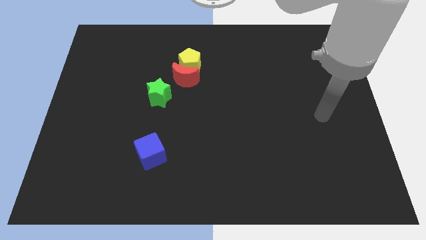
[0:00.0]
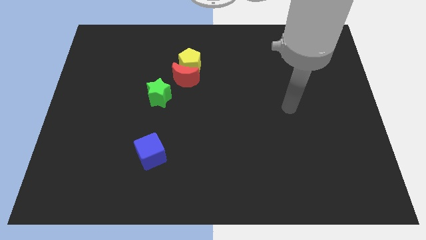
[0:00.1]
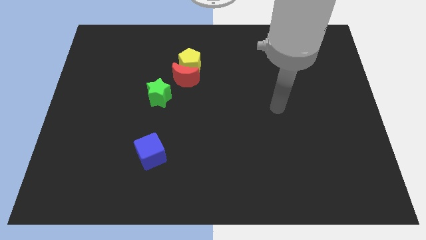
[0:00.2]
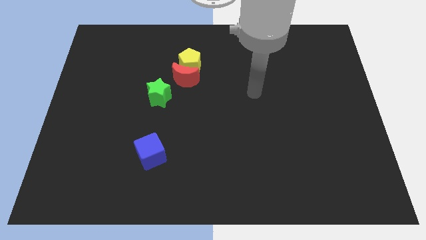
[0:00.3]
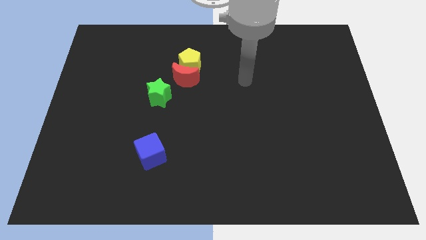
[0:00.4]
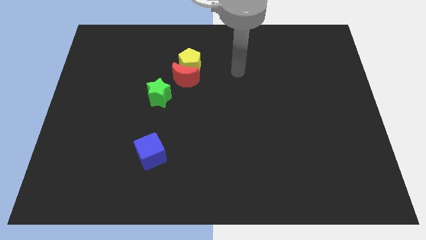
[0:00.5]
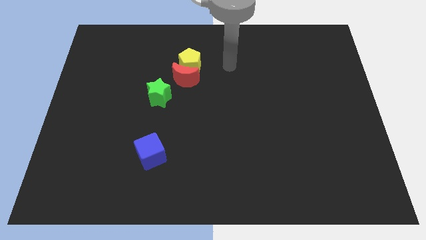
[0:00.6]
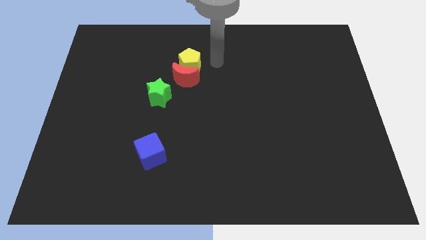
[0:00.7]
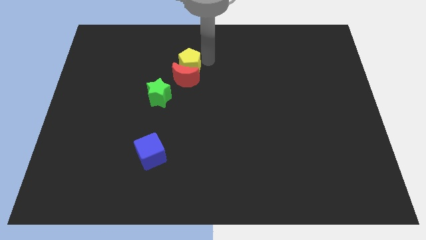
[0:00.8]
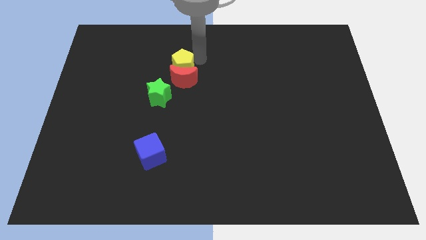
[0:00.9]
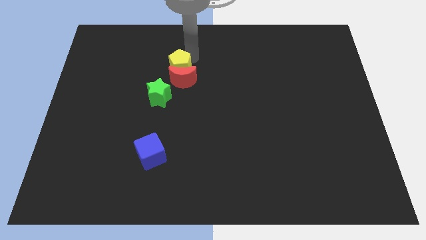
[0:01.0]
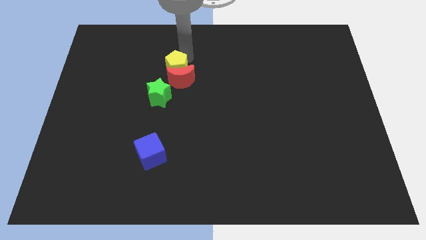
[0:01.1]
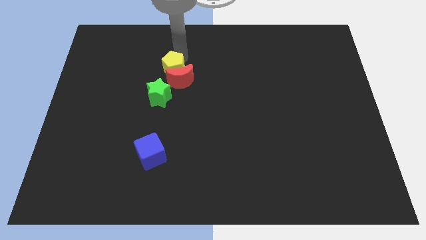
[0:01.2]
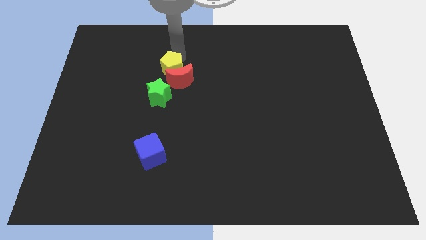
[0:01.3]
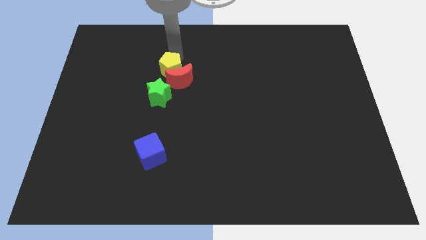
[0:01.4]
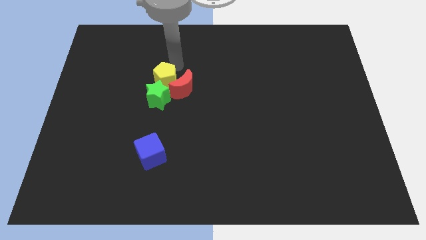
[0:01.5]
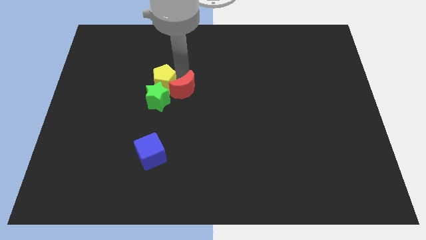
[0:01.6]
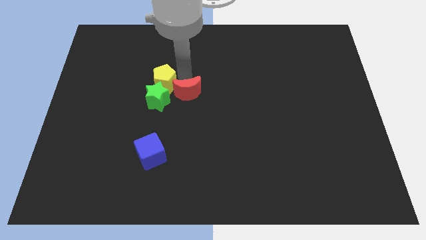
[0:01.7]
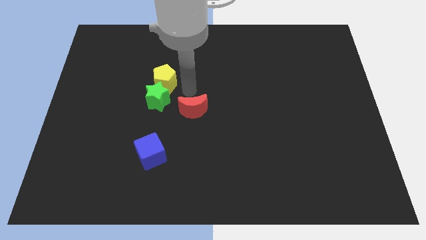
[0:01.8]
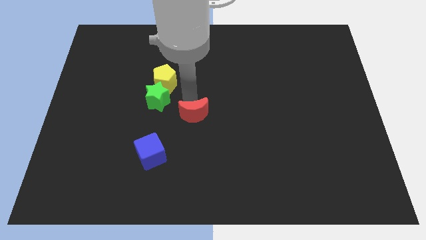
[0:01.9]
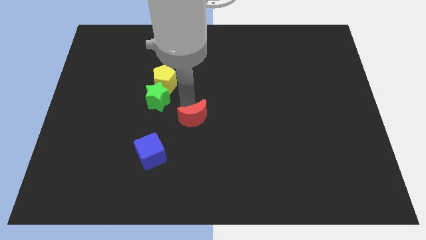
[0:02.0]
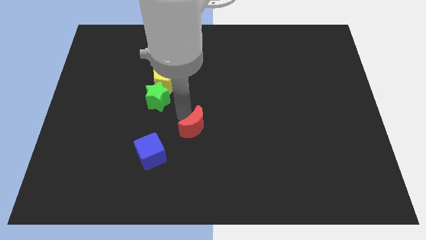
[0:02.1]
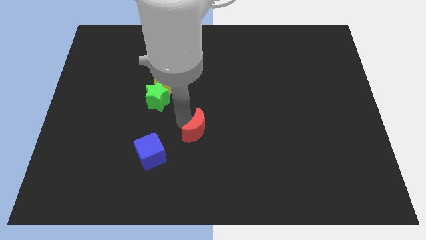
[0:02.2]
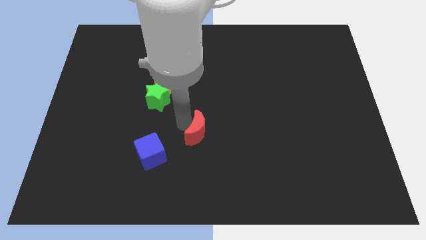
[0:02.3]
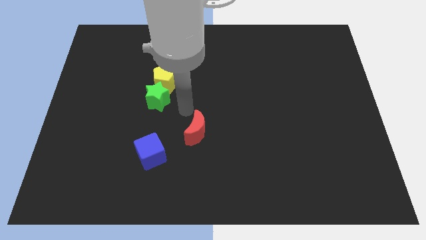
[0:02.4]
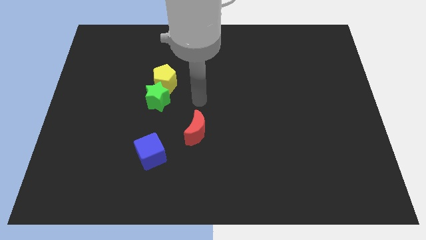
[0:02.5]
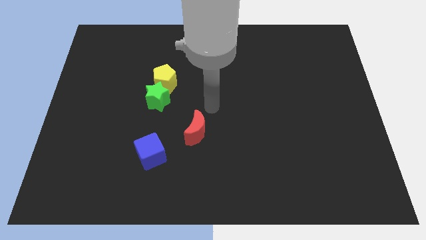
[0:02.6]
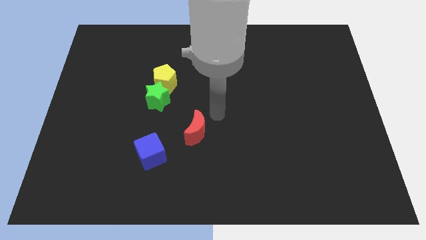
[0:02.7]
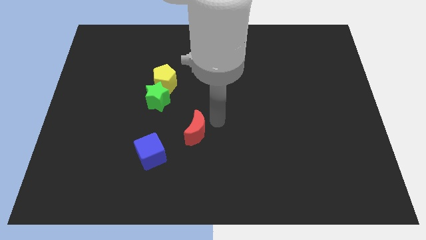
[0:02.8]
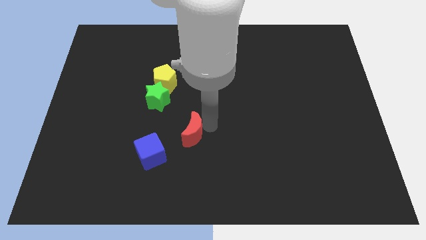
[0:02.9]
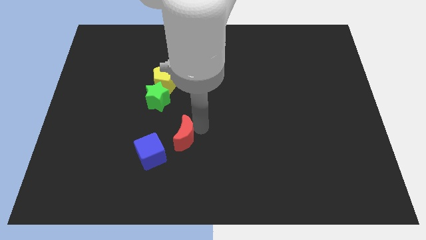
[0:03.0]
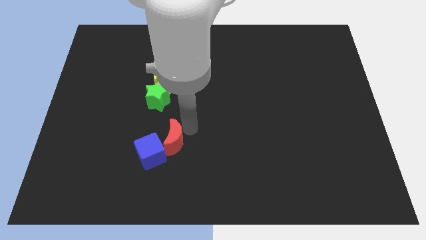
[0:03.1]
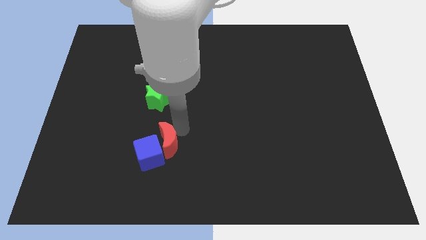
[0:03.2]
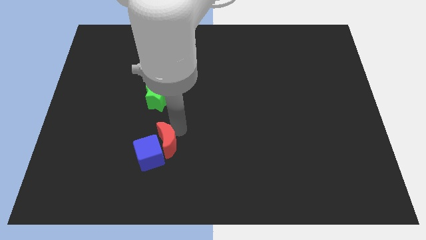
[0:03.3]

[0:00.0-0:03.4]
move the red block next to the blue cube

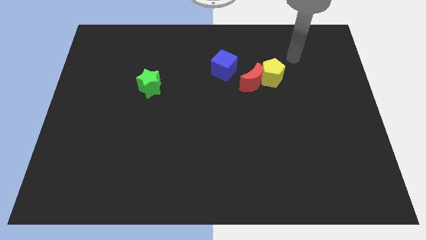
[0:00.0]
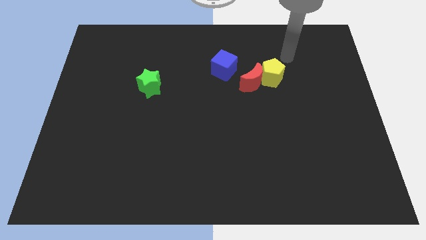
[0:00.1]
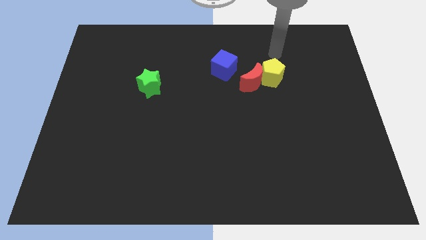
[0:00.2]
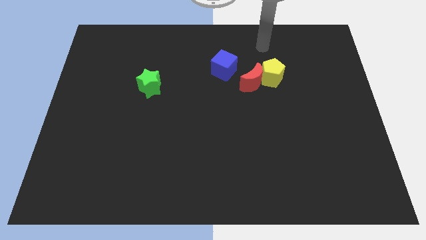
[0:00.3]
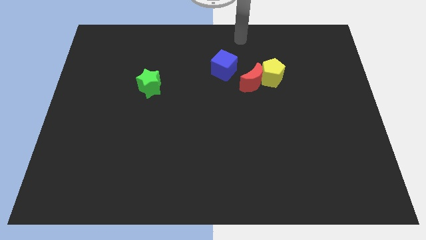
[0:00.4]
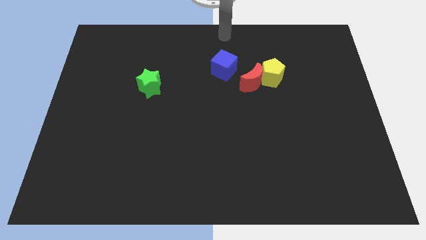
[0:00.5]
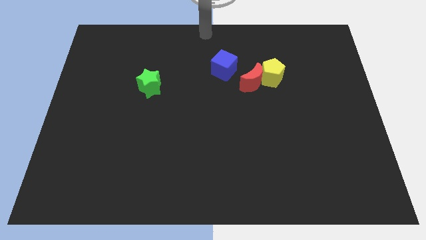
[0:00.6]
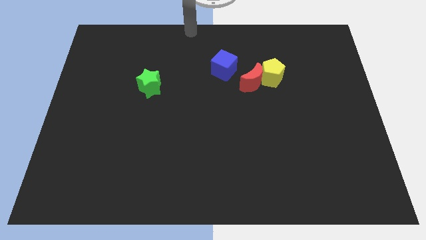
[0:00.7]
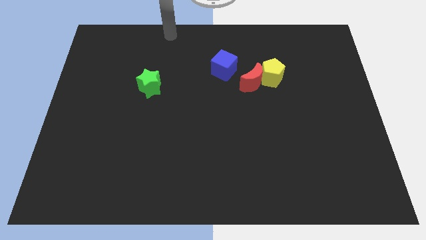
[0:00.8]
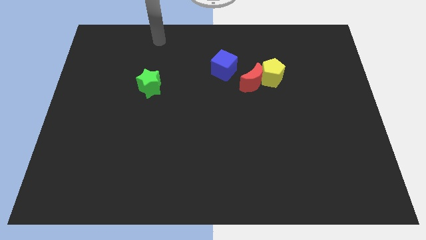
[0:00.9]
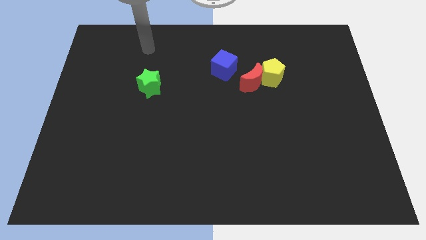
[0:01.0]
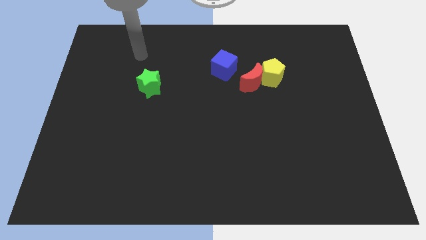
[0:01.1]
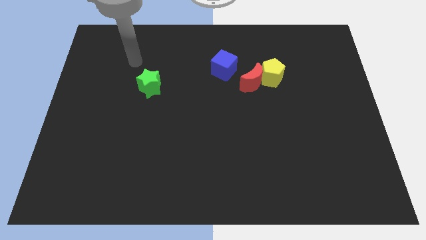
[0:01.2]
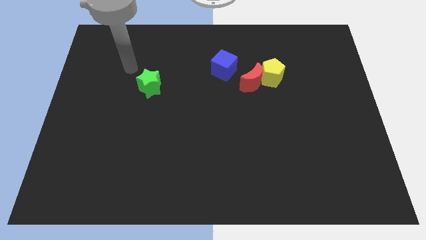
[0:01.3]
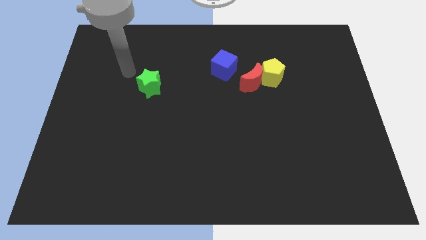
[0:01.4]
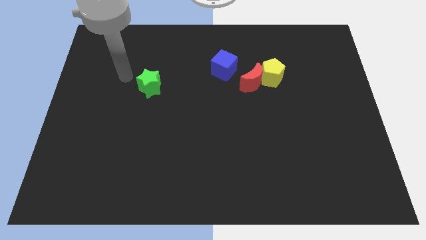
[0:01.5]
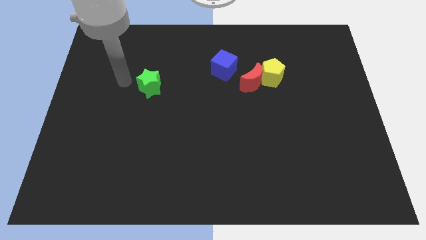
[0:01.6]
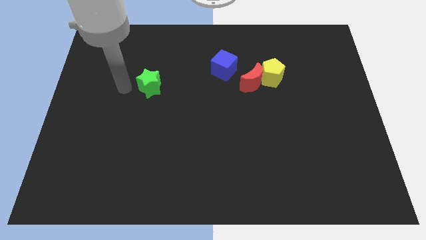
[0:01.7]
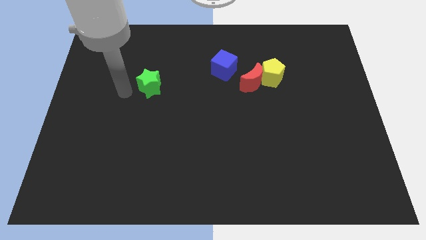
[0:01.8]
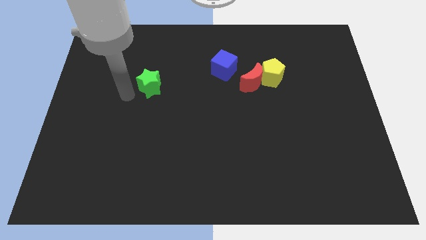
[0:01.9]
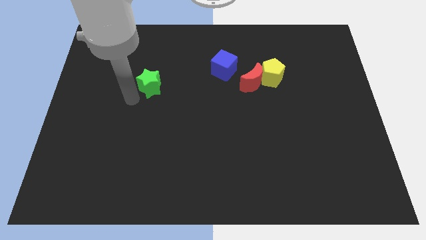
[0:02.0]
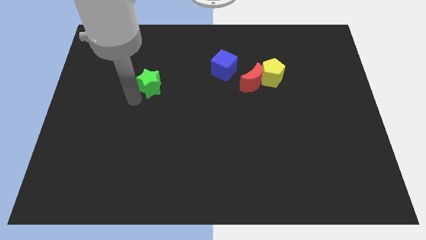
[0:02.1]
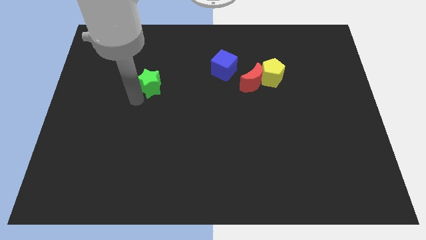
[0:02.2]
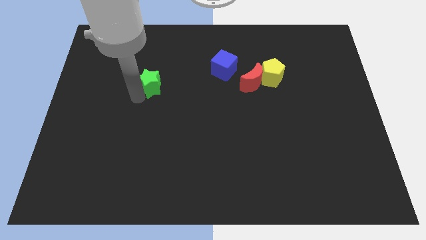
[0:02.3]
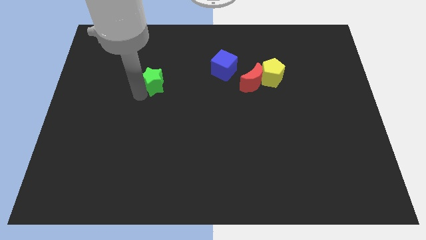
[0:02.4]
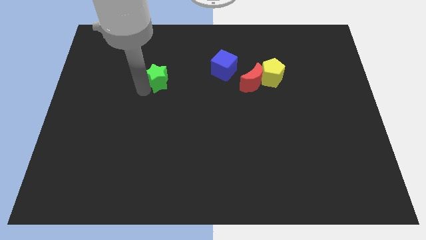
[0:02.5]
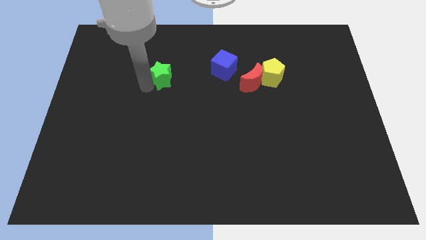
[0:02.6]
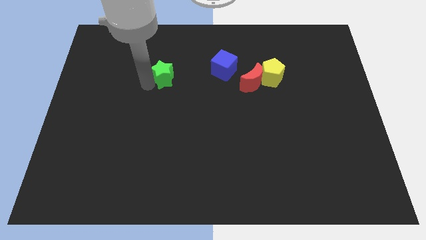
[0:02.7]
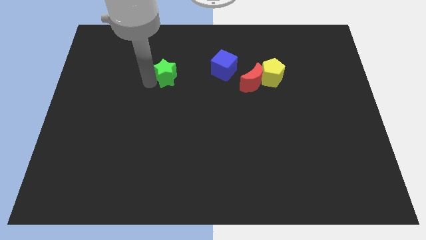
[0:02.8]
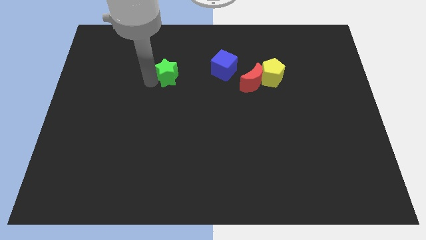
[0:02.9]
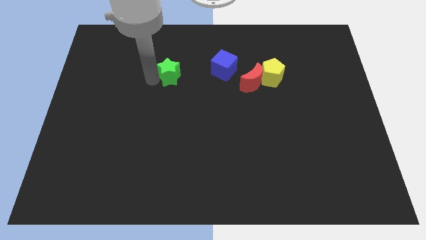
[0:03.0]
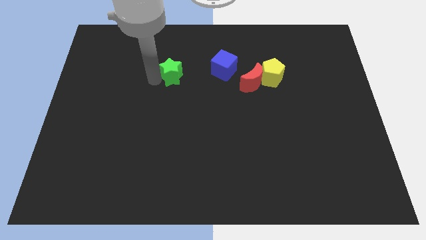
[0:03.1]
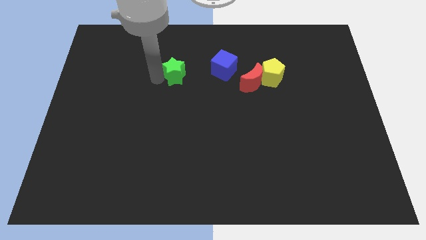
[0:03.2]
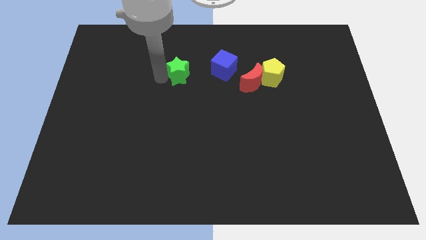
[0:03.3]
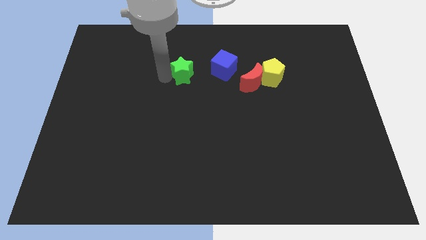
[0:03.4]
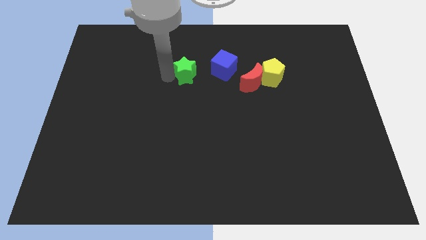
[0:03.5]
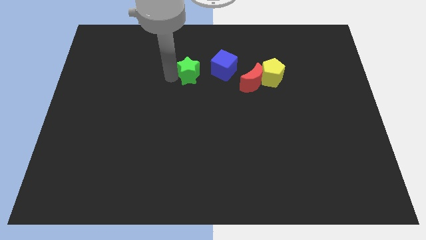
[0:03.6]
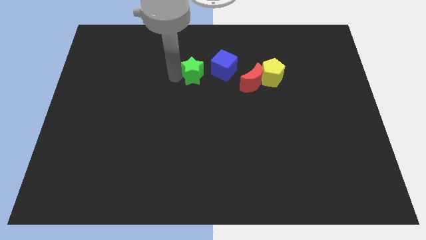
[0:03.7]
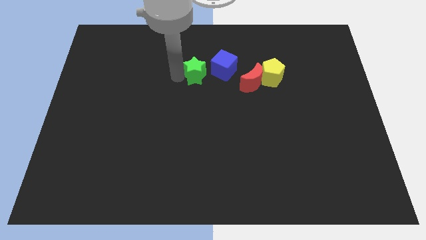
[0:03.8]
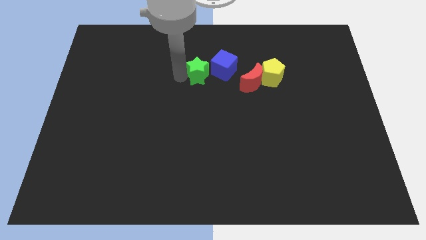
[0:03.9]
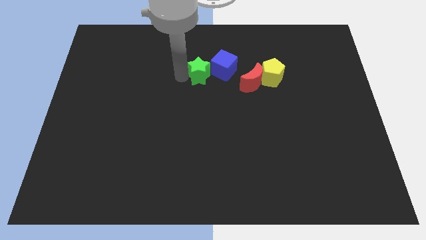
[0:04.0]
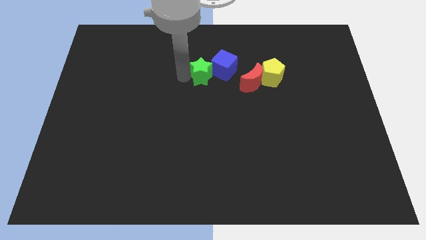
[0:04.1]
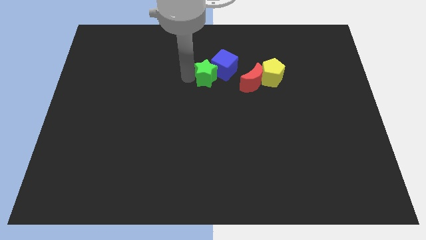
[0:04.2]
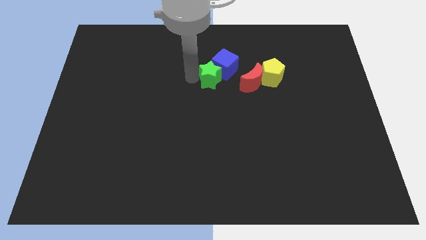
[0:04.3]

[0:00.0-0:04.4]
slide the green block close to the blue block

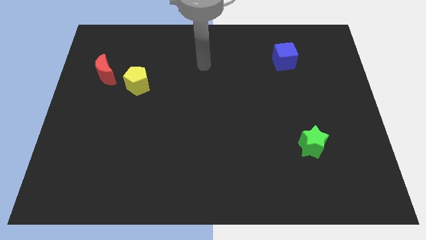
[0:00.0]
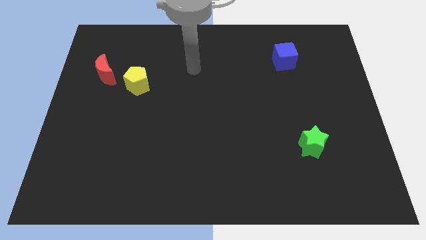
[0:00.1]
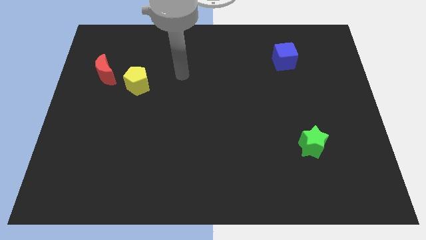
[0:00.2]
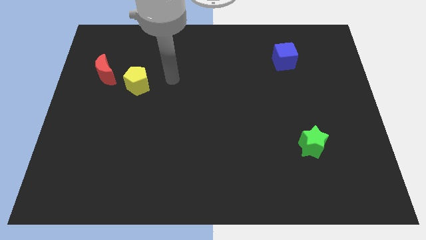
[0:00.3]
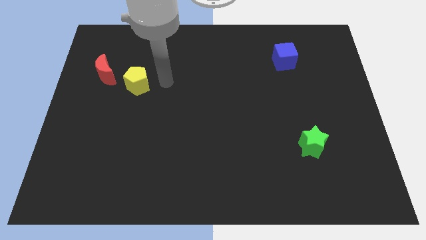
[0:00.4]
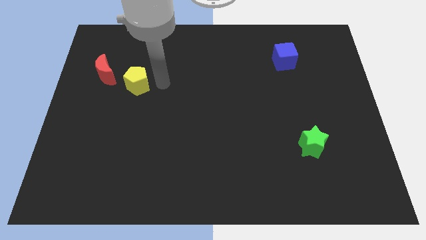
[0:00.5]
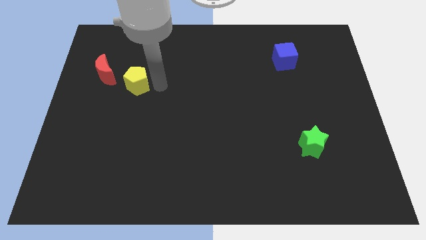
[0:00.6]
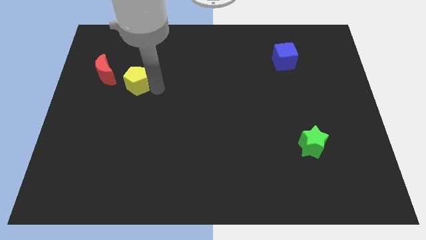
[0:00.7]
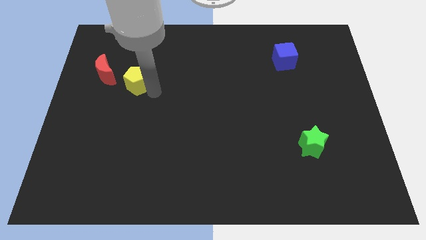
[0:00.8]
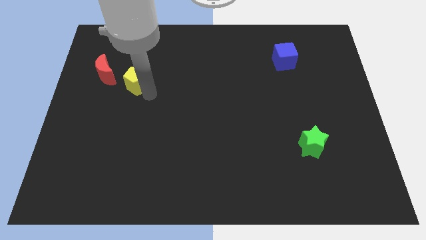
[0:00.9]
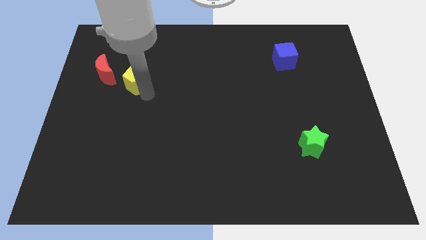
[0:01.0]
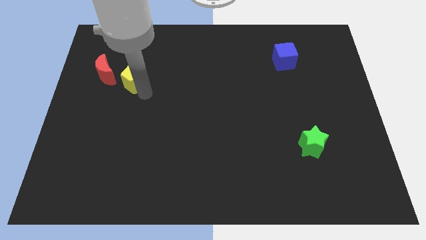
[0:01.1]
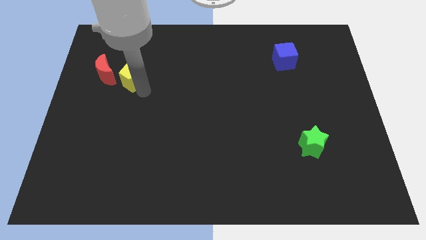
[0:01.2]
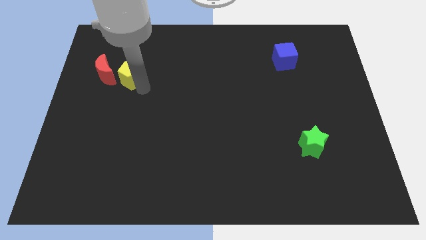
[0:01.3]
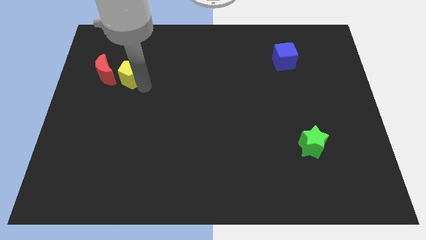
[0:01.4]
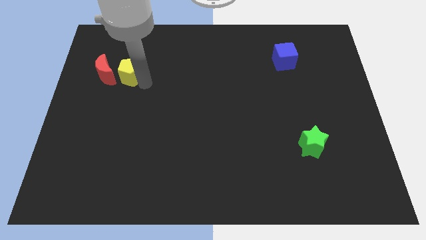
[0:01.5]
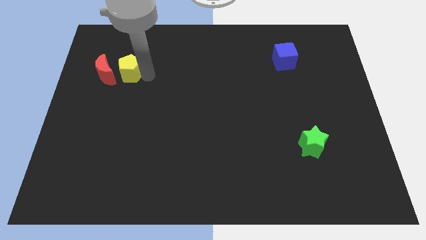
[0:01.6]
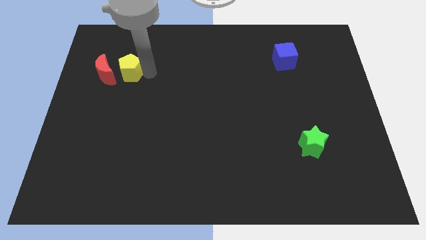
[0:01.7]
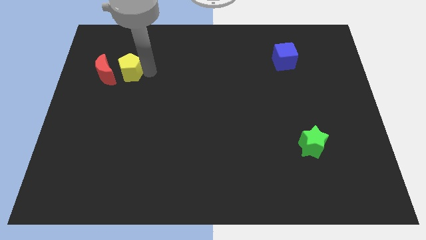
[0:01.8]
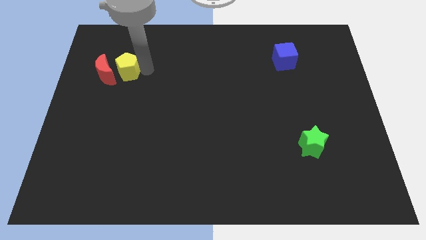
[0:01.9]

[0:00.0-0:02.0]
slide the yellow block towards the red block
